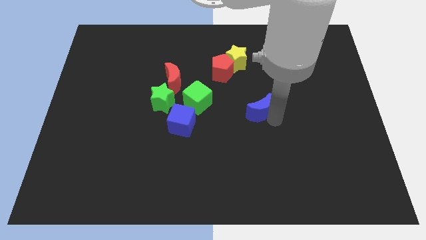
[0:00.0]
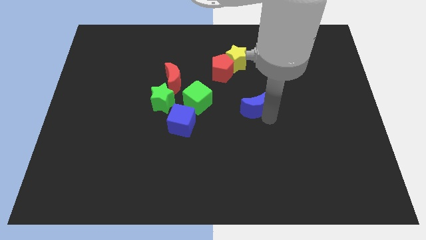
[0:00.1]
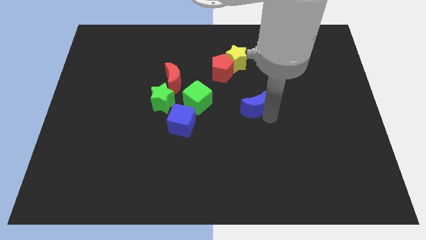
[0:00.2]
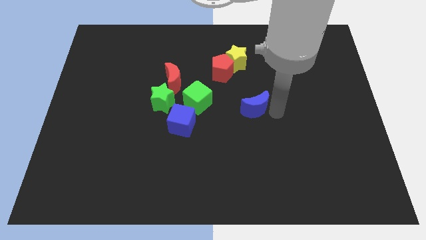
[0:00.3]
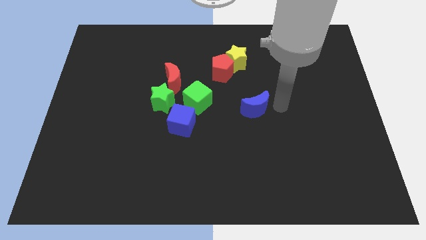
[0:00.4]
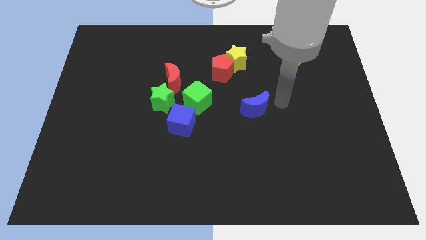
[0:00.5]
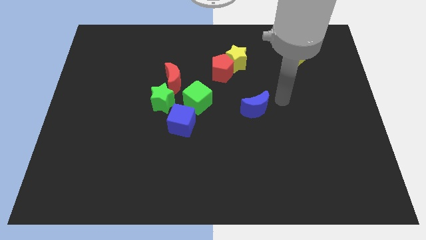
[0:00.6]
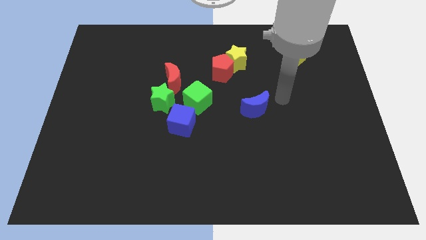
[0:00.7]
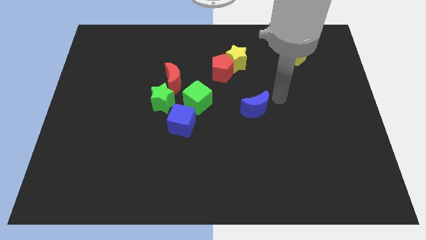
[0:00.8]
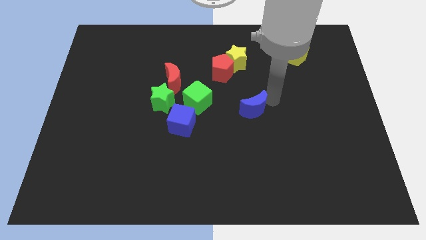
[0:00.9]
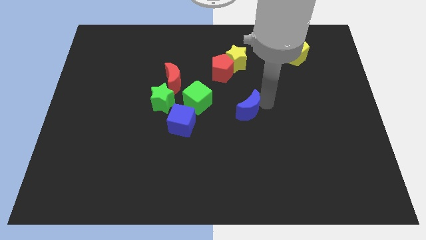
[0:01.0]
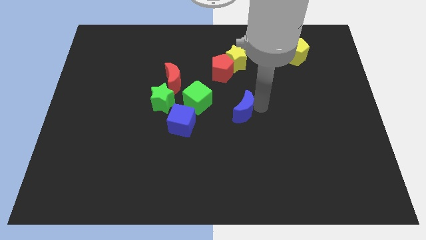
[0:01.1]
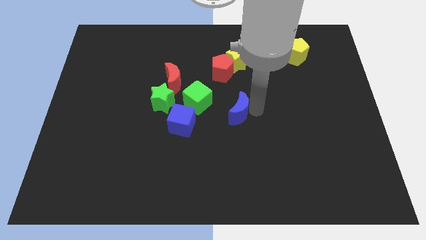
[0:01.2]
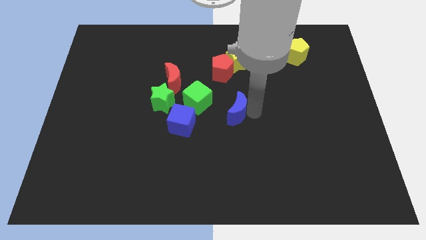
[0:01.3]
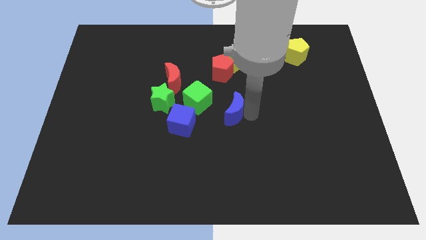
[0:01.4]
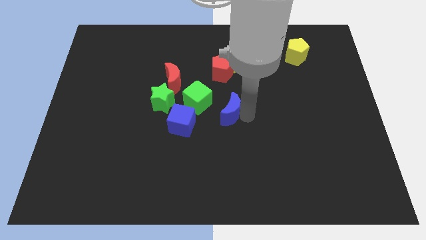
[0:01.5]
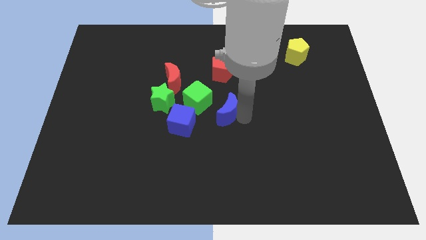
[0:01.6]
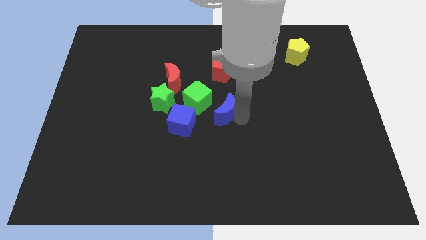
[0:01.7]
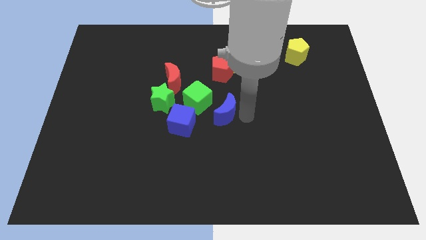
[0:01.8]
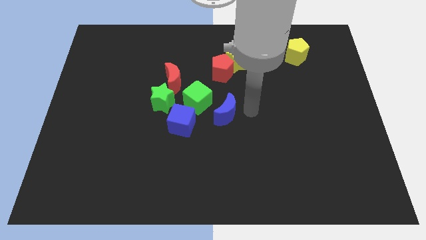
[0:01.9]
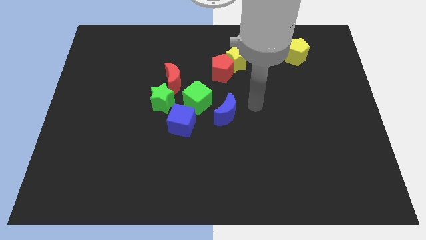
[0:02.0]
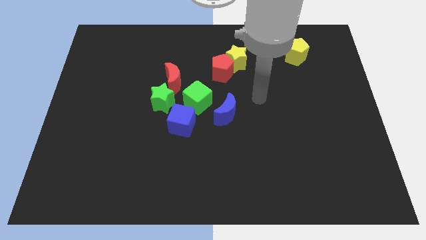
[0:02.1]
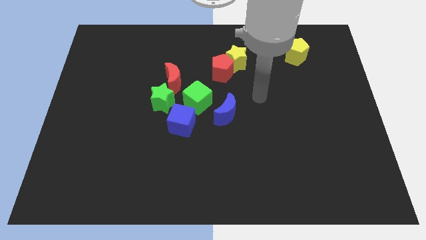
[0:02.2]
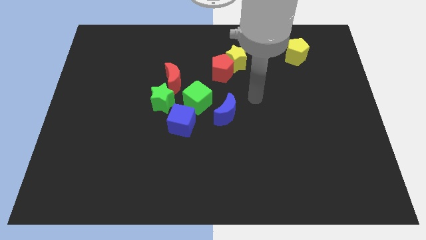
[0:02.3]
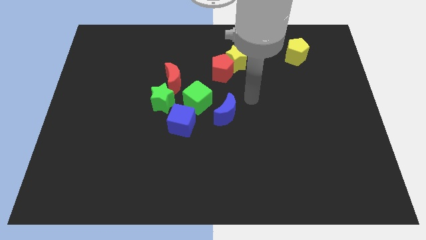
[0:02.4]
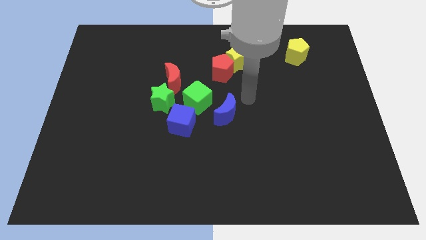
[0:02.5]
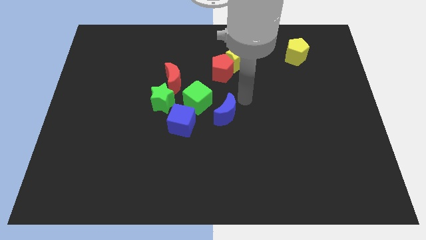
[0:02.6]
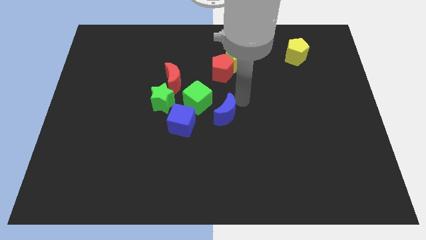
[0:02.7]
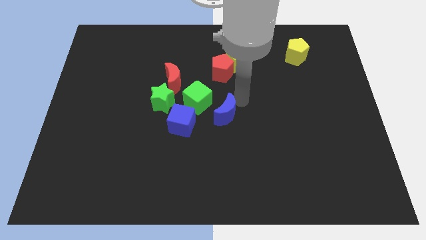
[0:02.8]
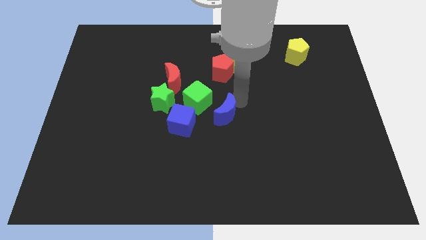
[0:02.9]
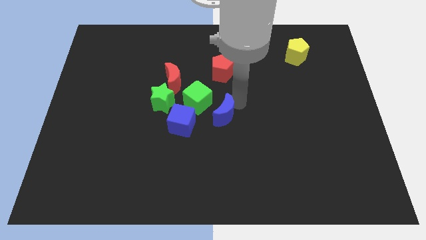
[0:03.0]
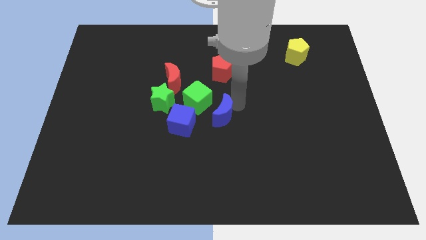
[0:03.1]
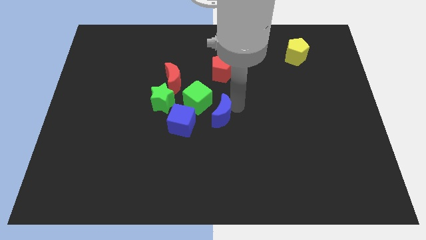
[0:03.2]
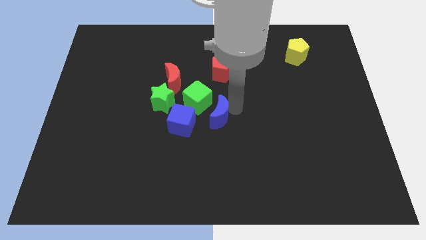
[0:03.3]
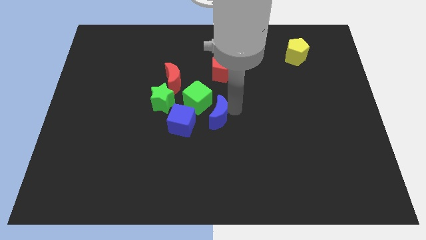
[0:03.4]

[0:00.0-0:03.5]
slide the blue moon close to the green cube

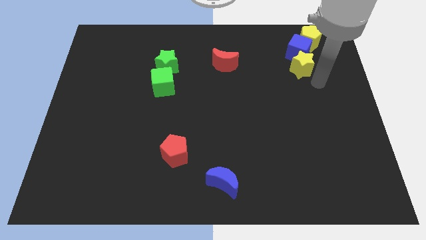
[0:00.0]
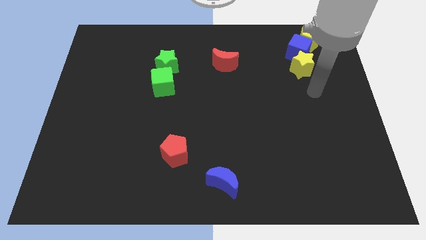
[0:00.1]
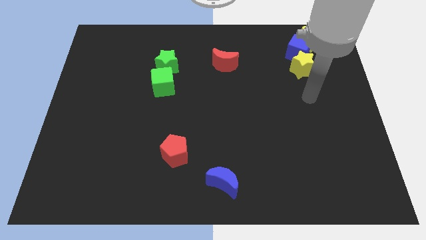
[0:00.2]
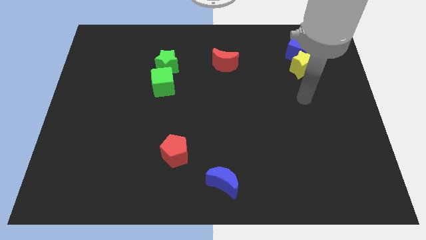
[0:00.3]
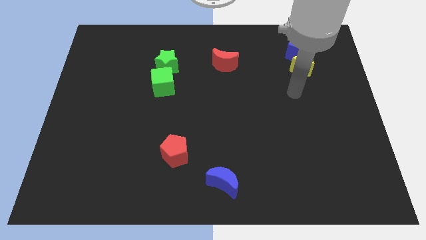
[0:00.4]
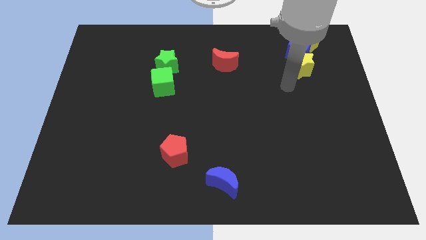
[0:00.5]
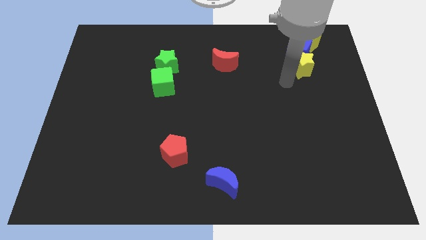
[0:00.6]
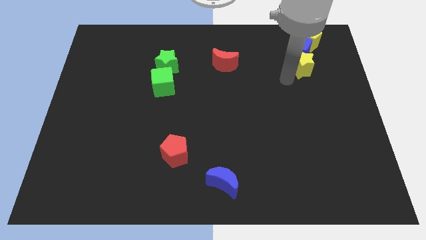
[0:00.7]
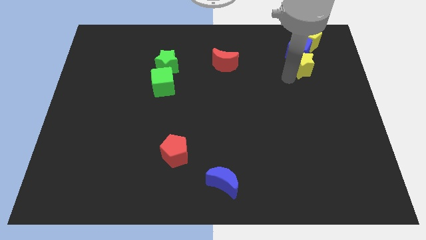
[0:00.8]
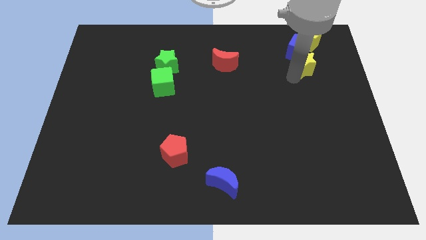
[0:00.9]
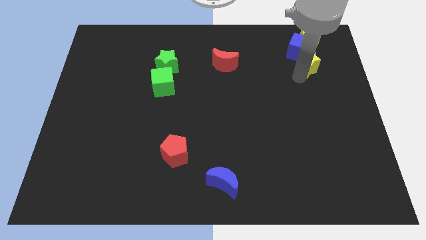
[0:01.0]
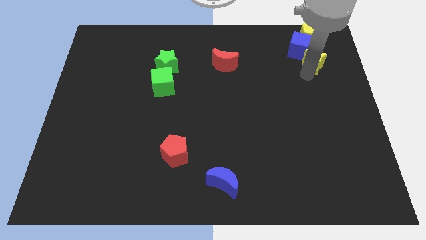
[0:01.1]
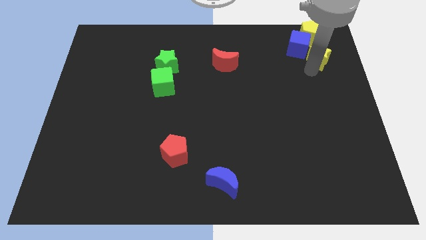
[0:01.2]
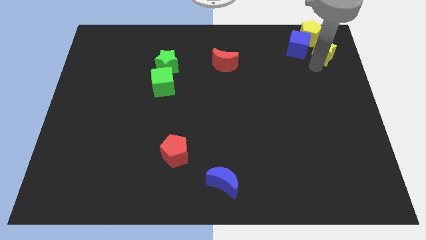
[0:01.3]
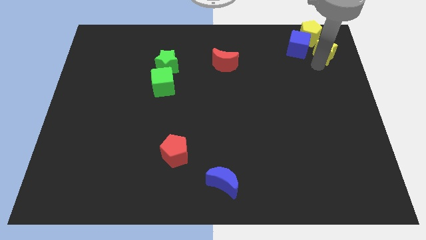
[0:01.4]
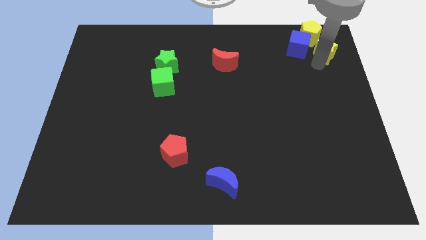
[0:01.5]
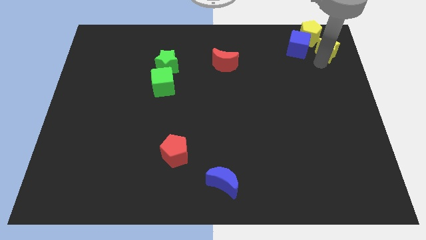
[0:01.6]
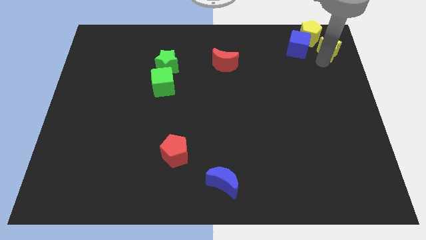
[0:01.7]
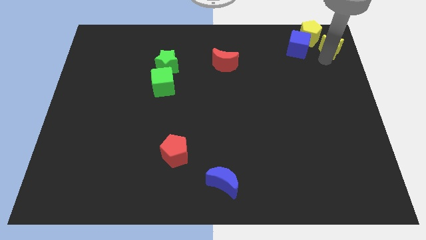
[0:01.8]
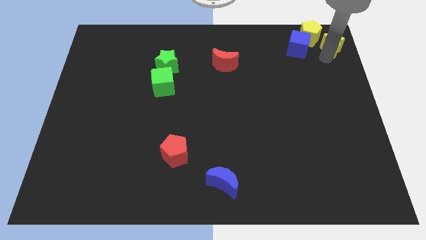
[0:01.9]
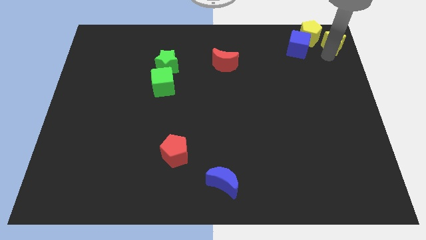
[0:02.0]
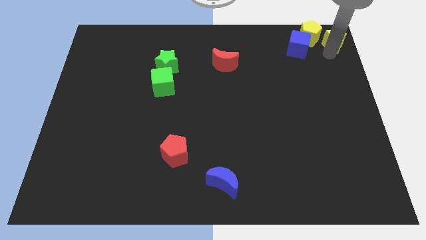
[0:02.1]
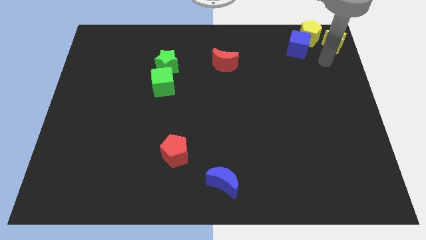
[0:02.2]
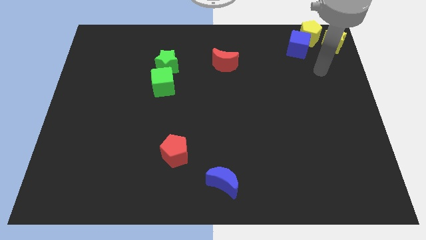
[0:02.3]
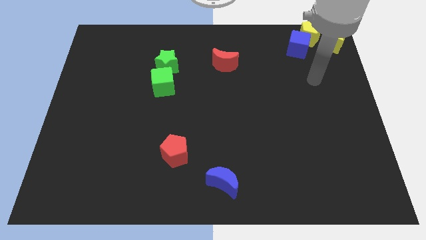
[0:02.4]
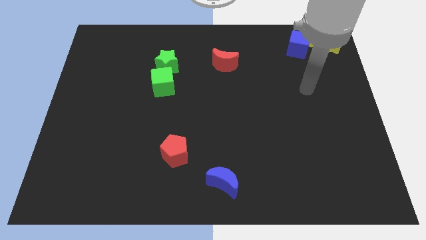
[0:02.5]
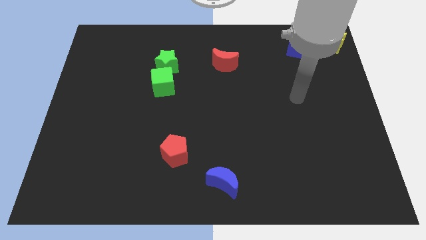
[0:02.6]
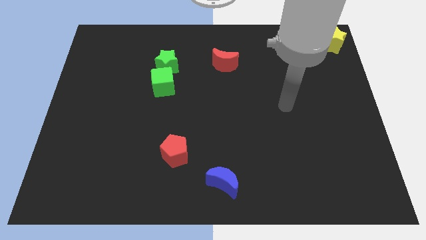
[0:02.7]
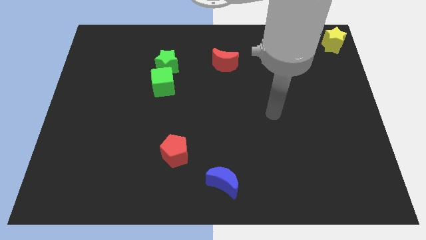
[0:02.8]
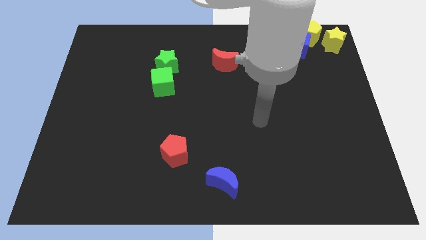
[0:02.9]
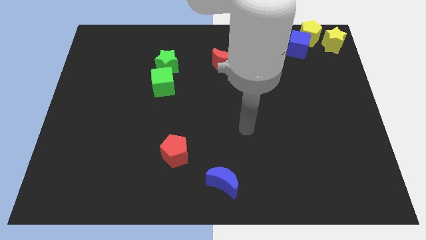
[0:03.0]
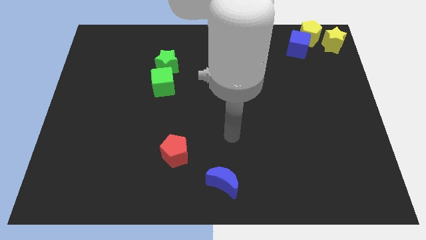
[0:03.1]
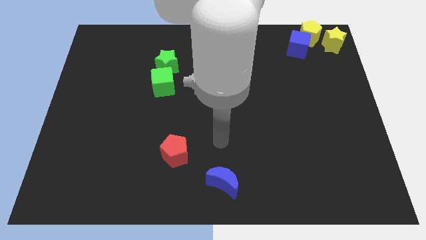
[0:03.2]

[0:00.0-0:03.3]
move the yellow star to the top right corner of the board

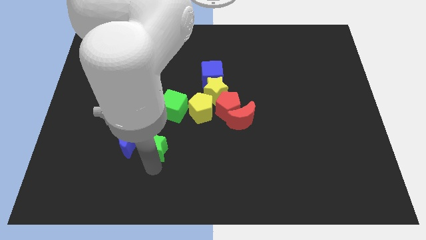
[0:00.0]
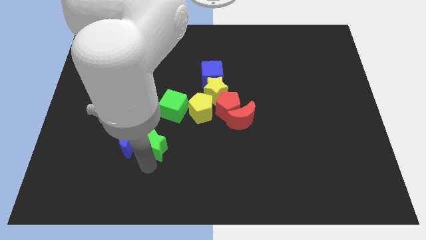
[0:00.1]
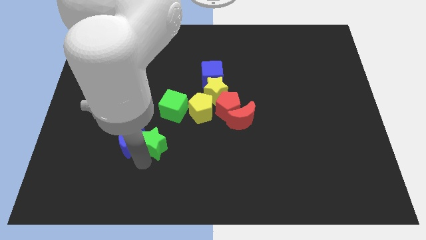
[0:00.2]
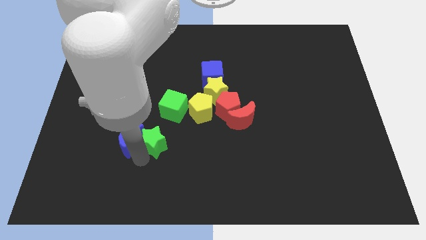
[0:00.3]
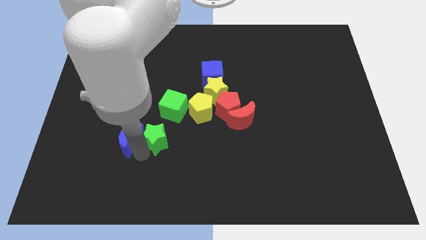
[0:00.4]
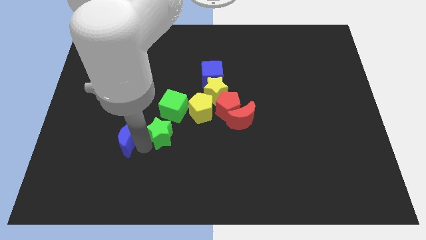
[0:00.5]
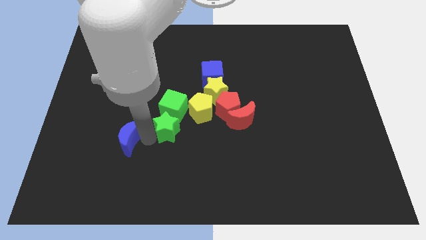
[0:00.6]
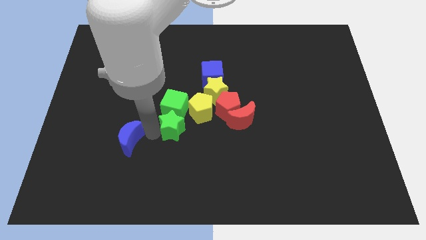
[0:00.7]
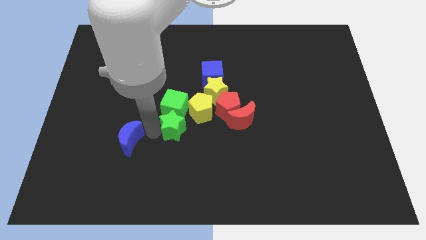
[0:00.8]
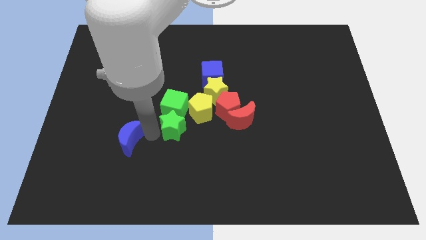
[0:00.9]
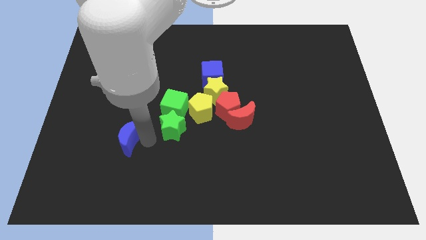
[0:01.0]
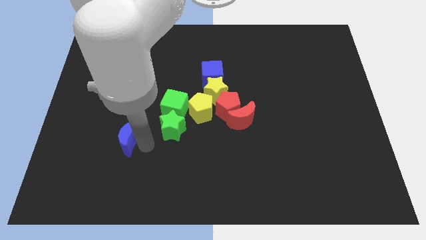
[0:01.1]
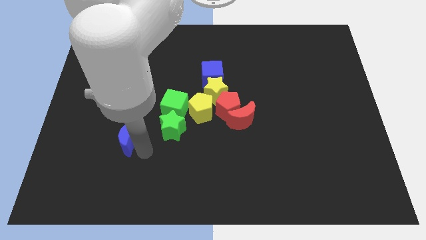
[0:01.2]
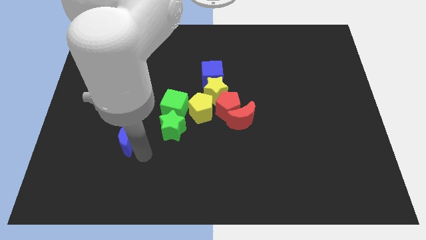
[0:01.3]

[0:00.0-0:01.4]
place the green star below the green cube

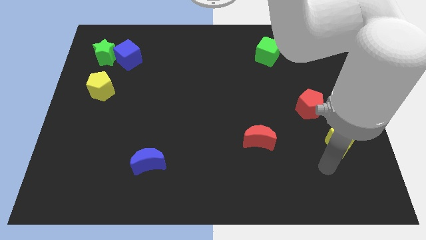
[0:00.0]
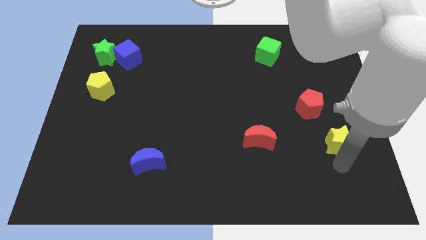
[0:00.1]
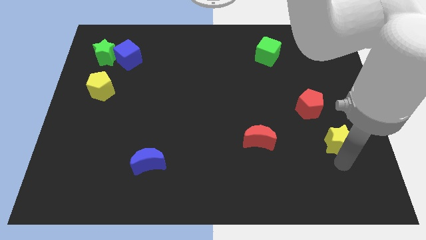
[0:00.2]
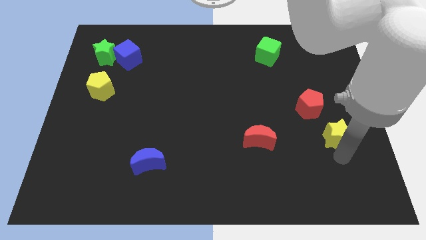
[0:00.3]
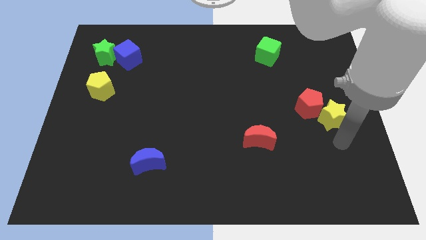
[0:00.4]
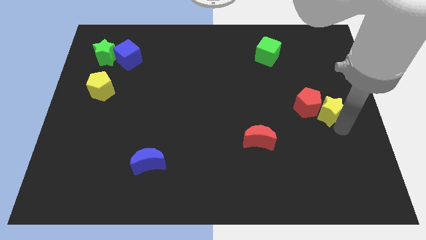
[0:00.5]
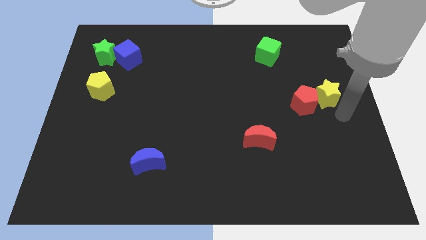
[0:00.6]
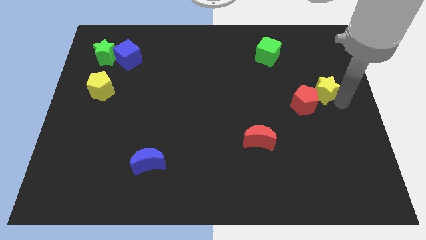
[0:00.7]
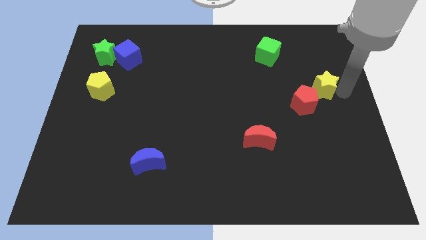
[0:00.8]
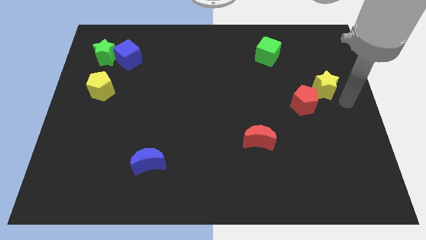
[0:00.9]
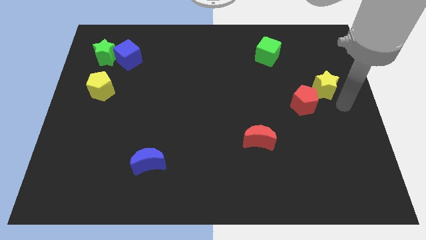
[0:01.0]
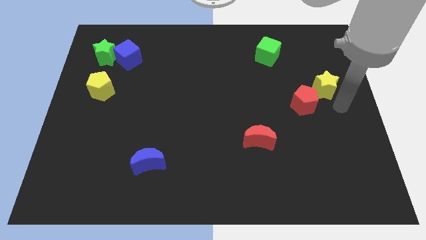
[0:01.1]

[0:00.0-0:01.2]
slide the yellow star slightly upwards
